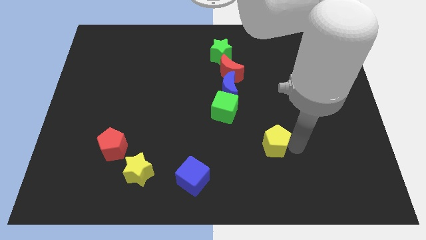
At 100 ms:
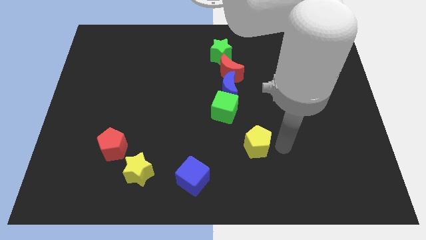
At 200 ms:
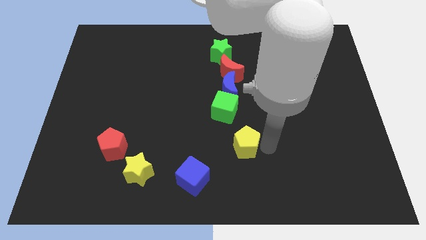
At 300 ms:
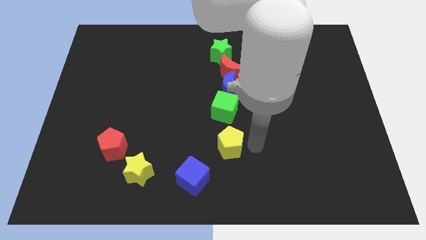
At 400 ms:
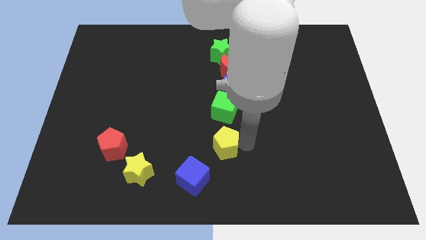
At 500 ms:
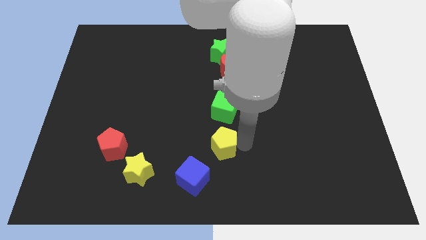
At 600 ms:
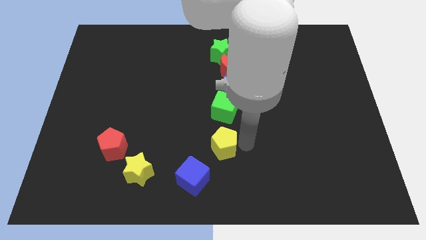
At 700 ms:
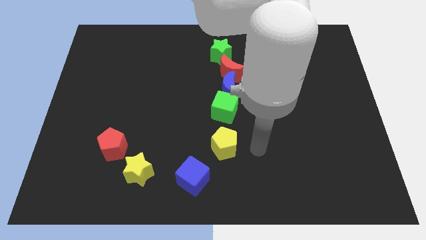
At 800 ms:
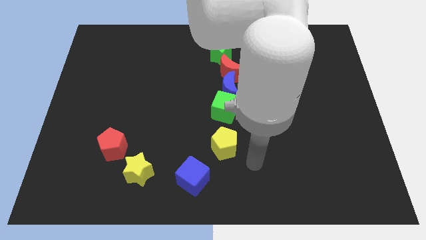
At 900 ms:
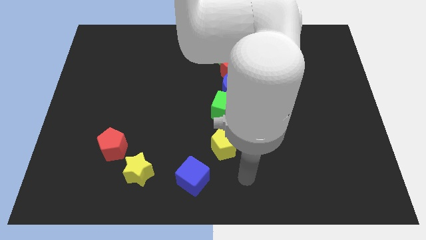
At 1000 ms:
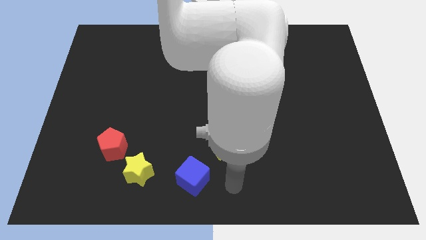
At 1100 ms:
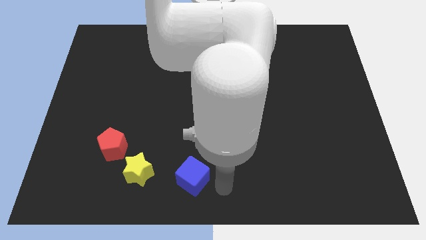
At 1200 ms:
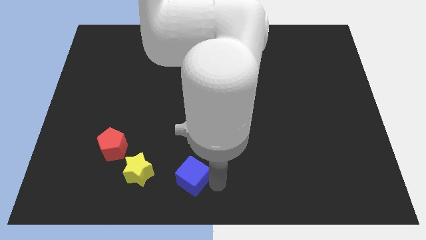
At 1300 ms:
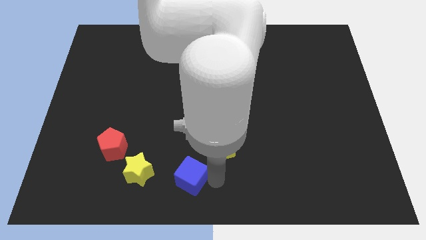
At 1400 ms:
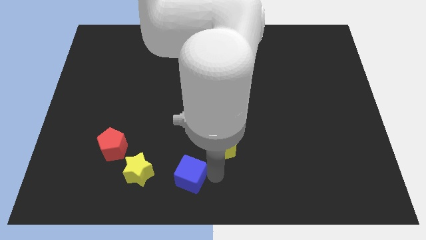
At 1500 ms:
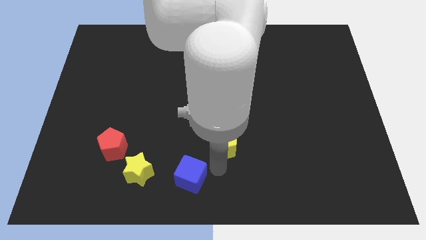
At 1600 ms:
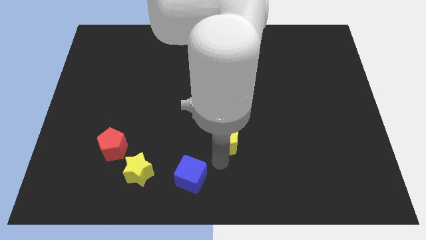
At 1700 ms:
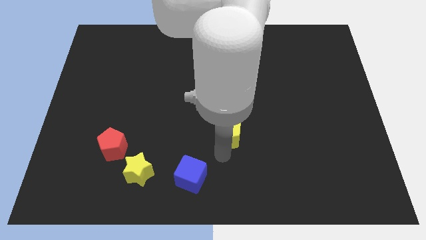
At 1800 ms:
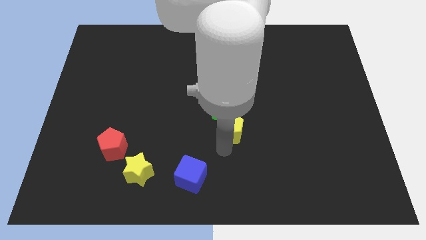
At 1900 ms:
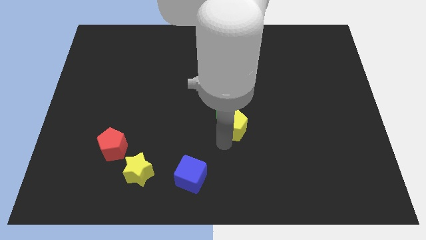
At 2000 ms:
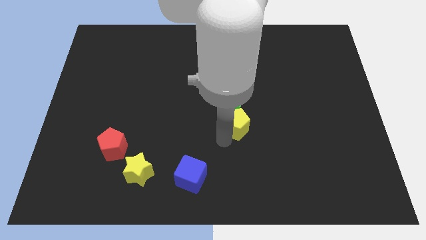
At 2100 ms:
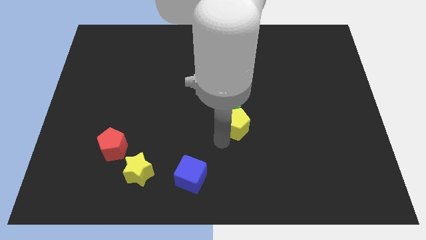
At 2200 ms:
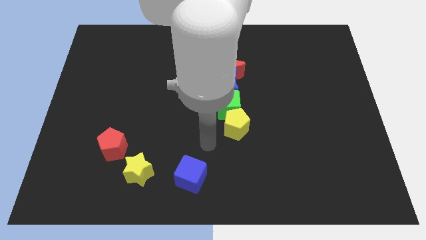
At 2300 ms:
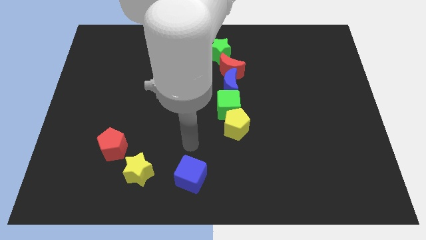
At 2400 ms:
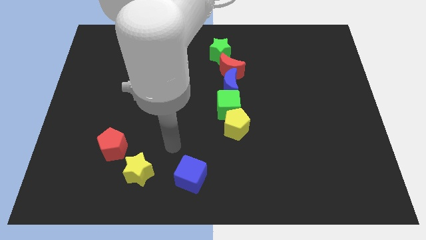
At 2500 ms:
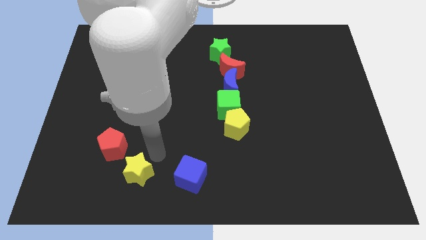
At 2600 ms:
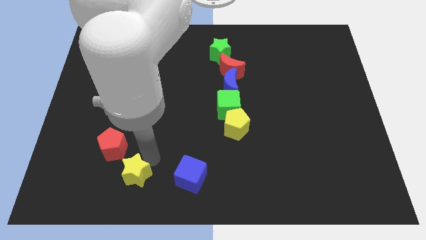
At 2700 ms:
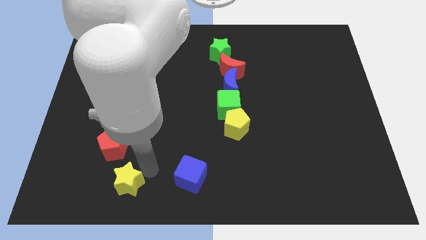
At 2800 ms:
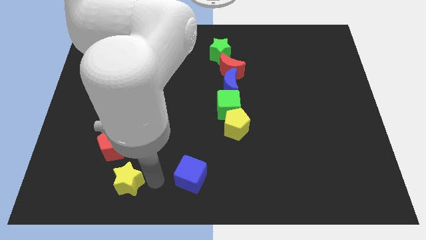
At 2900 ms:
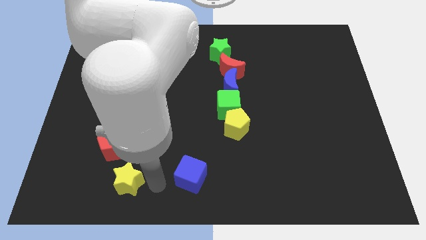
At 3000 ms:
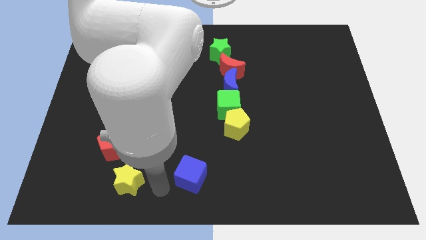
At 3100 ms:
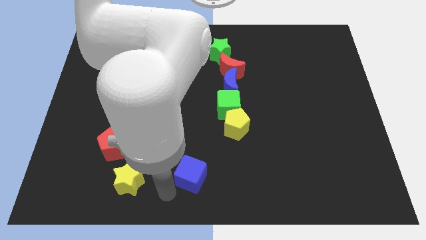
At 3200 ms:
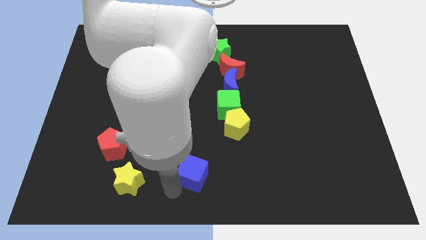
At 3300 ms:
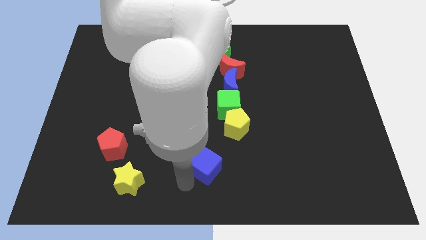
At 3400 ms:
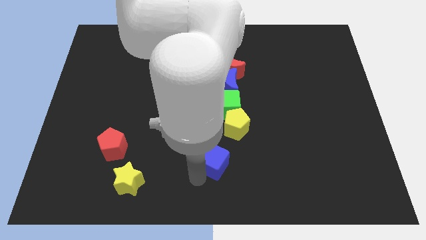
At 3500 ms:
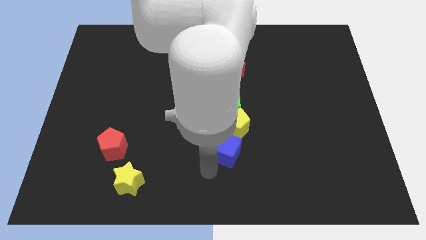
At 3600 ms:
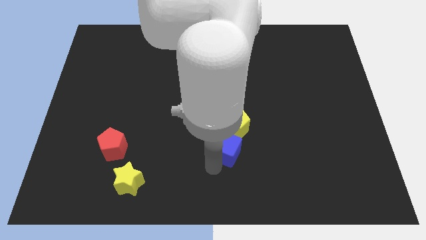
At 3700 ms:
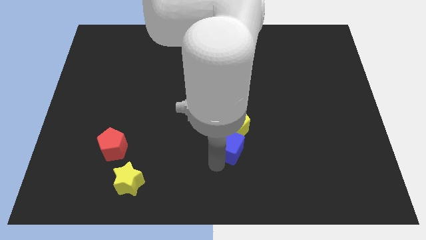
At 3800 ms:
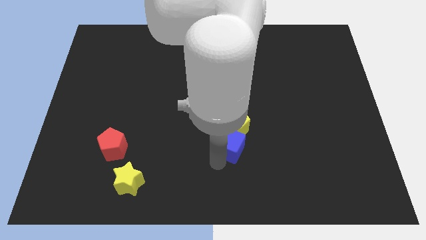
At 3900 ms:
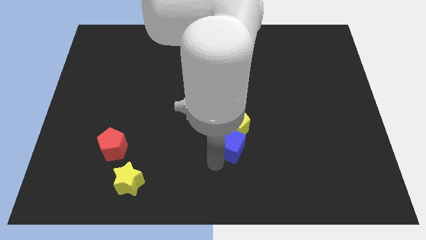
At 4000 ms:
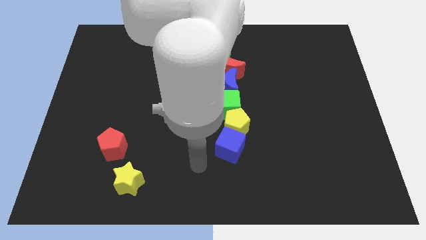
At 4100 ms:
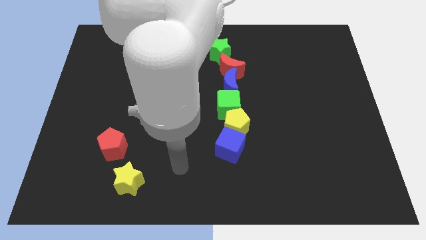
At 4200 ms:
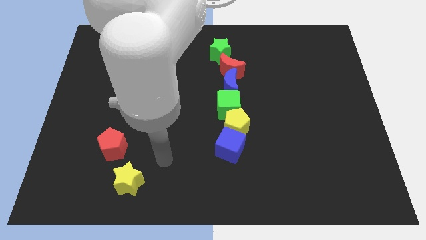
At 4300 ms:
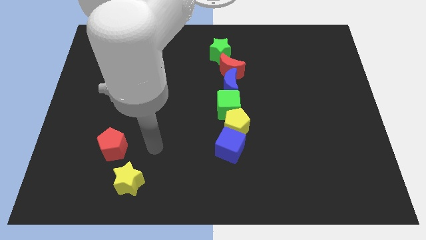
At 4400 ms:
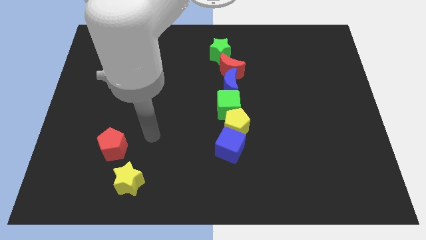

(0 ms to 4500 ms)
place yellow pentagon blue cube into the group of blocks forming vertical line

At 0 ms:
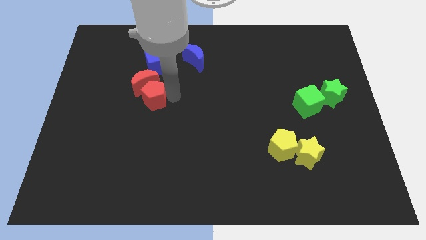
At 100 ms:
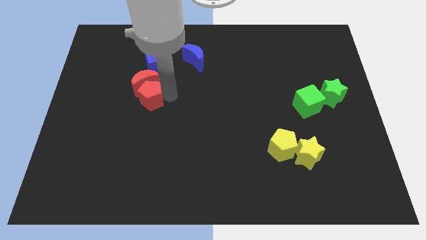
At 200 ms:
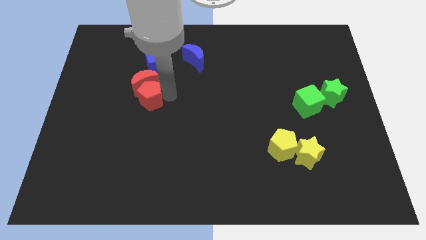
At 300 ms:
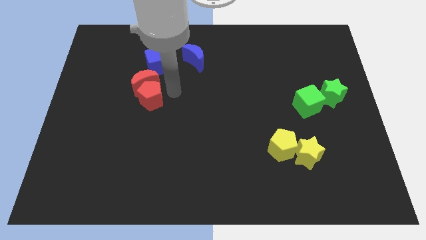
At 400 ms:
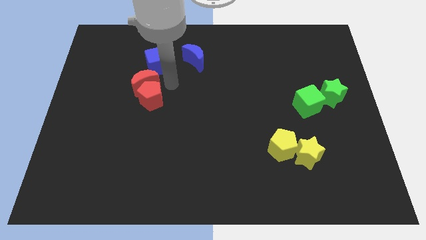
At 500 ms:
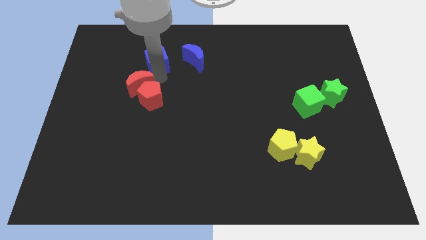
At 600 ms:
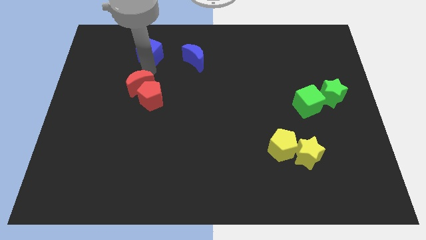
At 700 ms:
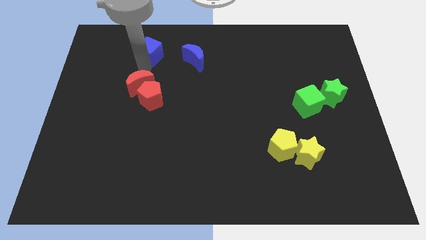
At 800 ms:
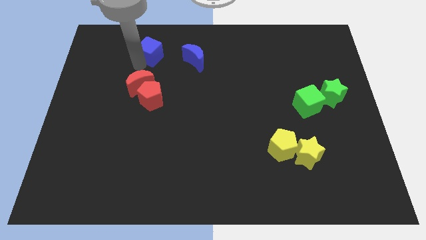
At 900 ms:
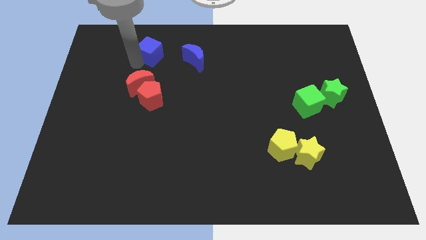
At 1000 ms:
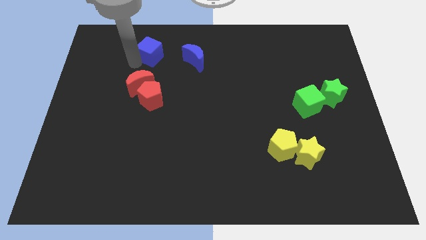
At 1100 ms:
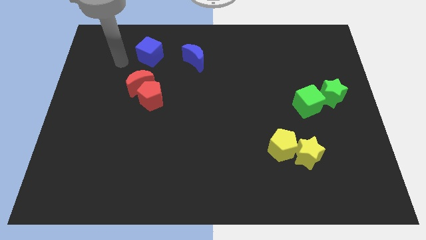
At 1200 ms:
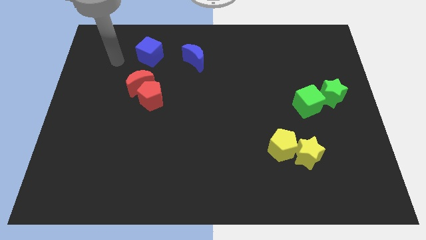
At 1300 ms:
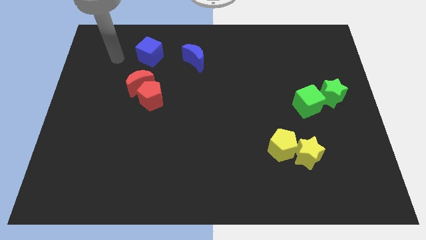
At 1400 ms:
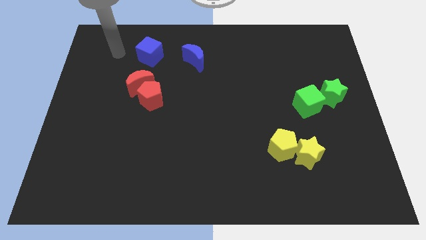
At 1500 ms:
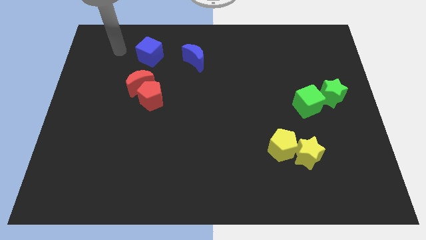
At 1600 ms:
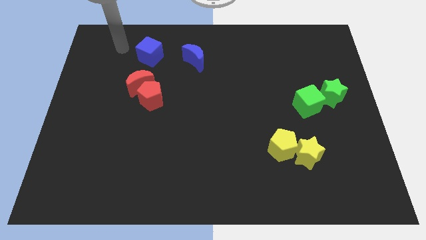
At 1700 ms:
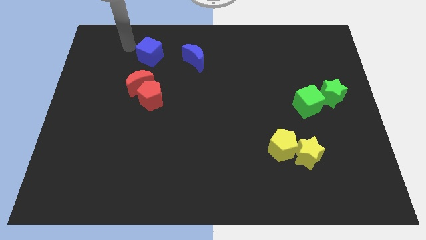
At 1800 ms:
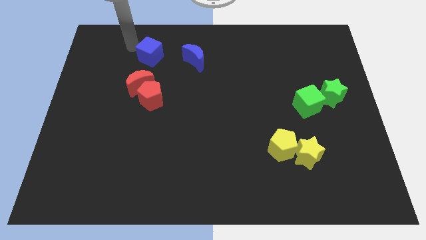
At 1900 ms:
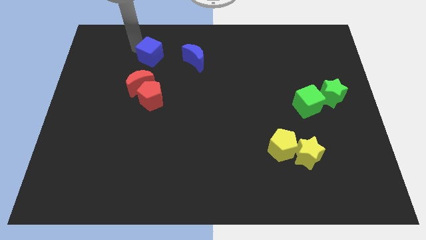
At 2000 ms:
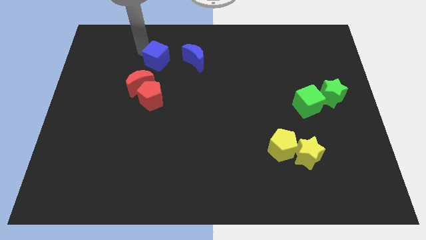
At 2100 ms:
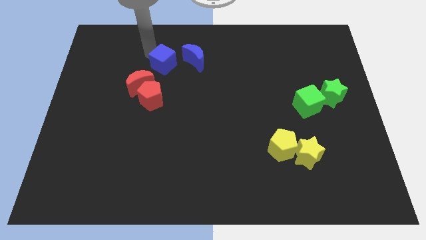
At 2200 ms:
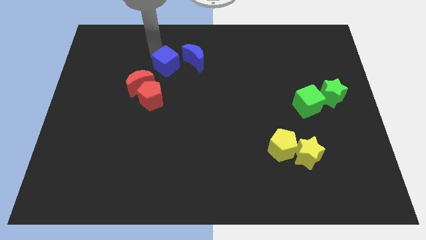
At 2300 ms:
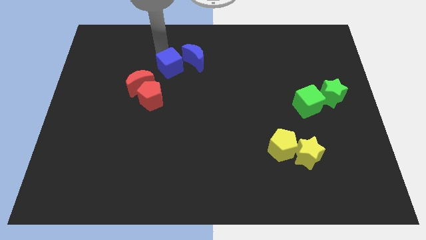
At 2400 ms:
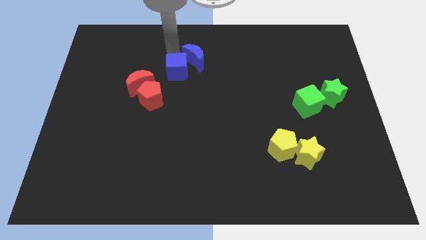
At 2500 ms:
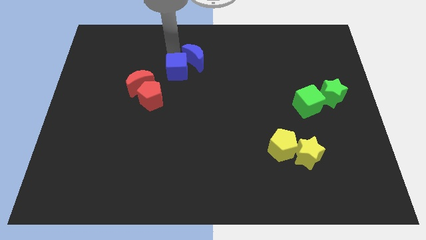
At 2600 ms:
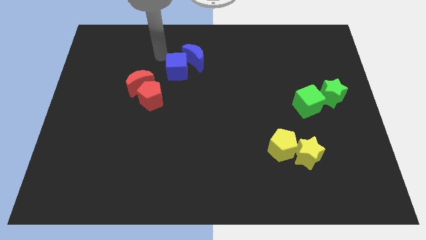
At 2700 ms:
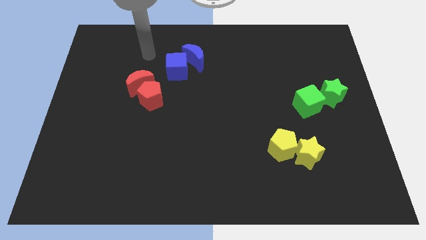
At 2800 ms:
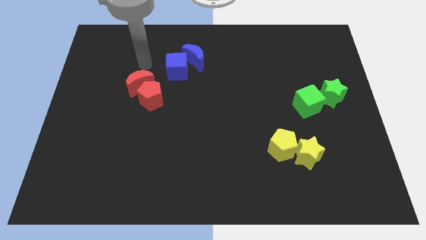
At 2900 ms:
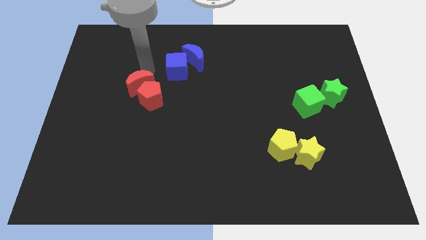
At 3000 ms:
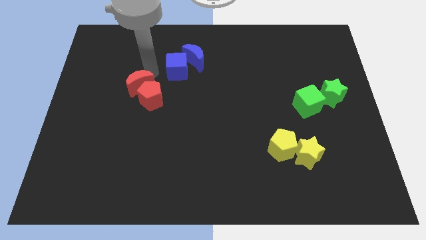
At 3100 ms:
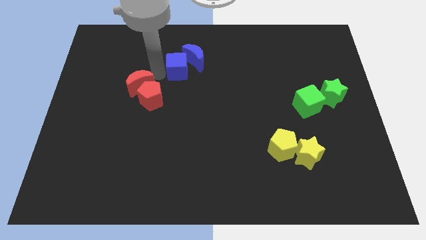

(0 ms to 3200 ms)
separate the blue cube and red moon

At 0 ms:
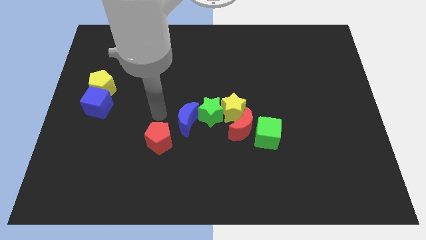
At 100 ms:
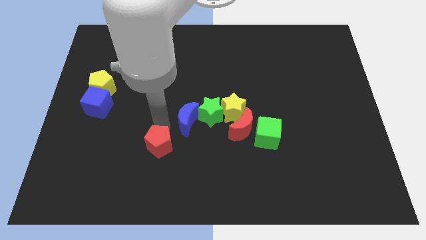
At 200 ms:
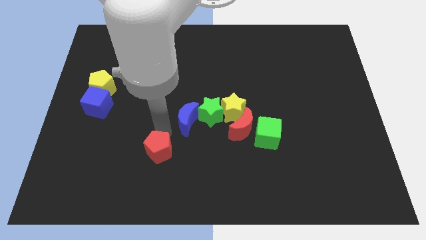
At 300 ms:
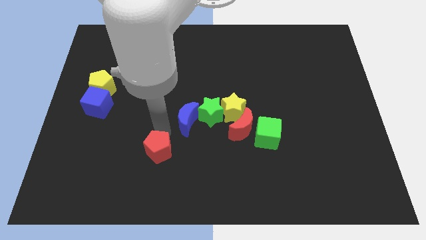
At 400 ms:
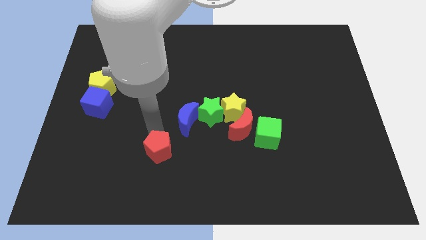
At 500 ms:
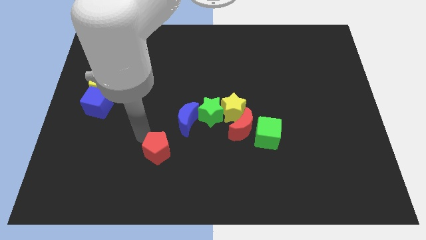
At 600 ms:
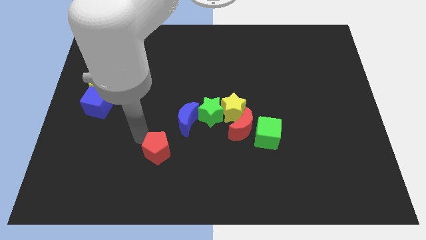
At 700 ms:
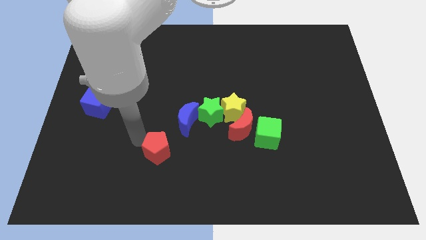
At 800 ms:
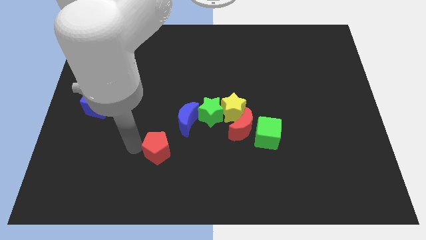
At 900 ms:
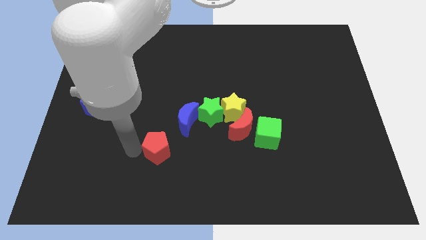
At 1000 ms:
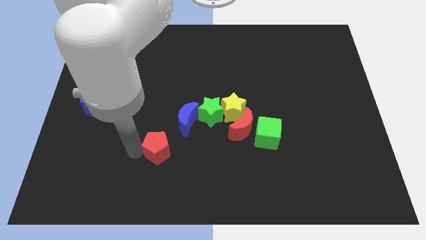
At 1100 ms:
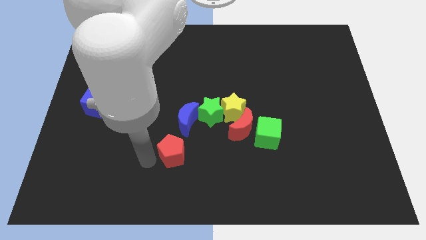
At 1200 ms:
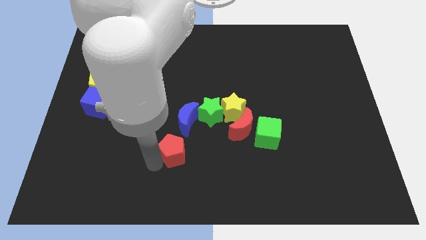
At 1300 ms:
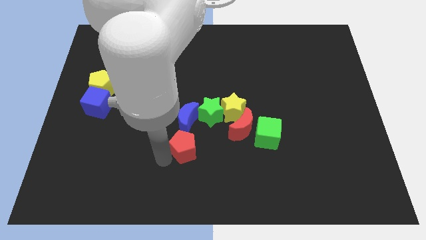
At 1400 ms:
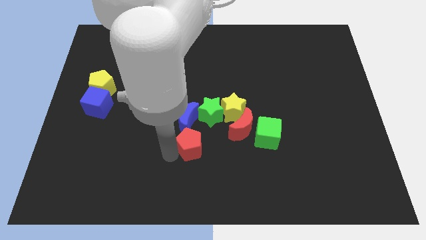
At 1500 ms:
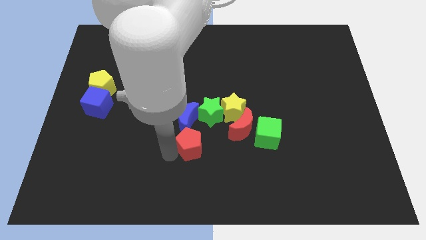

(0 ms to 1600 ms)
put the red pentagon below the blue crescent
